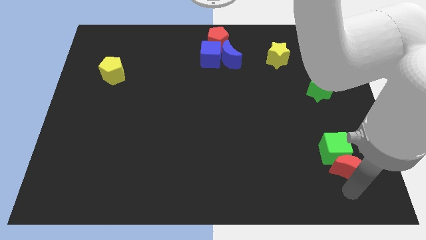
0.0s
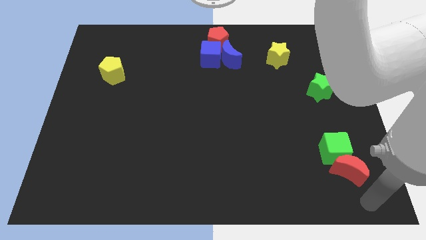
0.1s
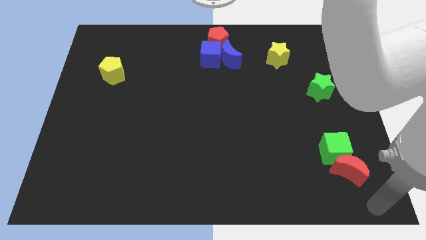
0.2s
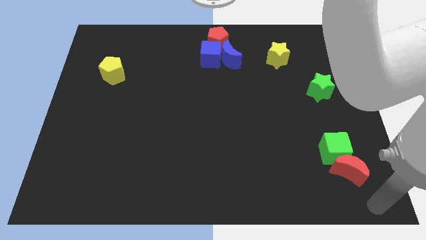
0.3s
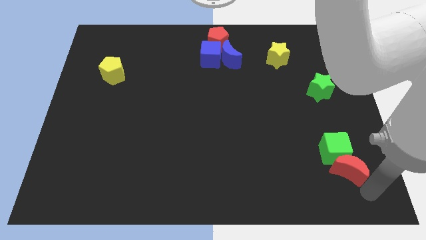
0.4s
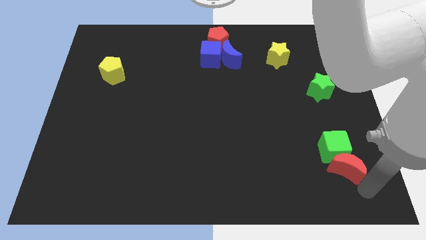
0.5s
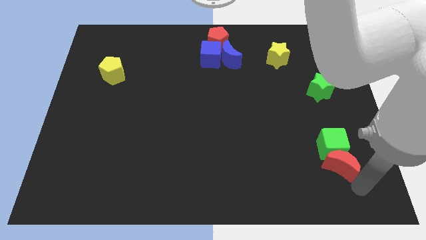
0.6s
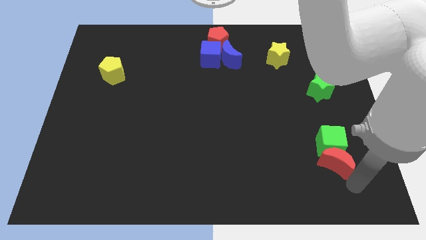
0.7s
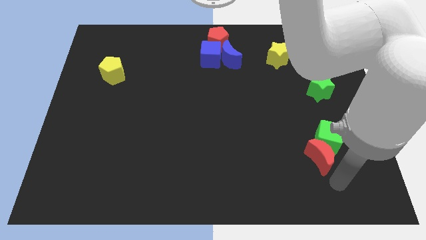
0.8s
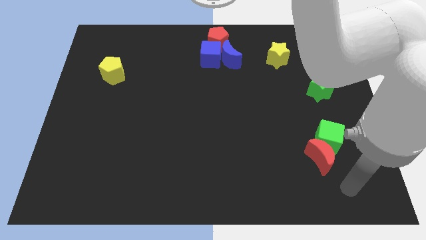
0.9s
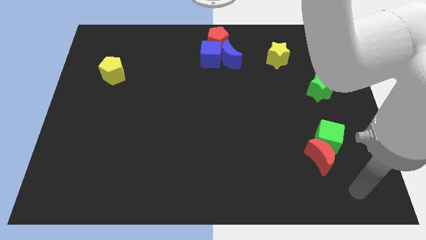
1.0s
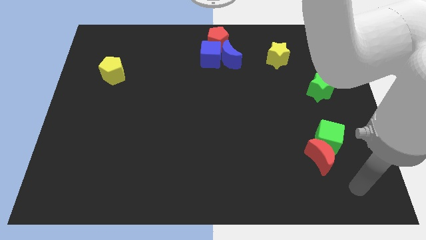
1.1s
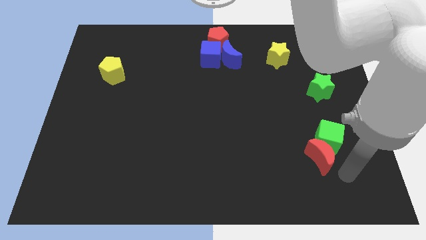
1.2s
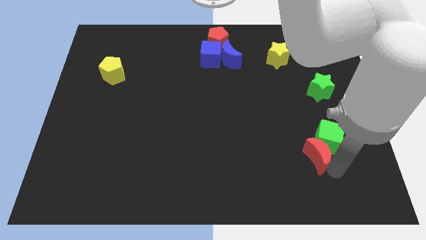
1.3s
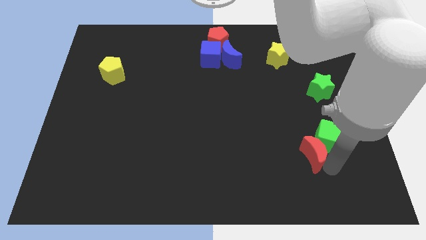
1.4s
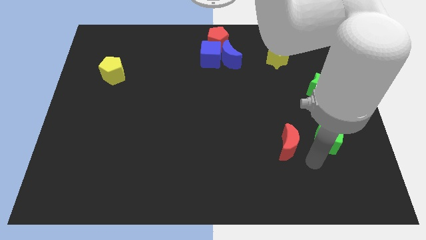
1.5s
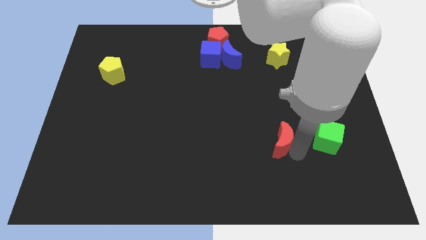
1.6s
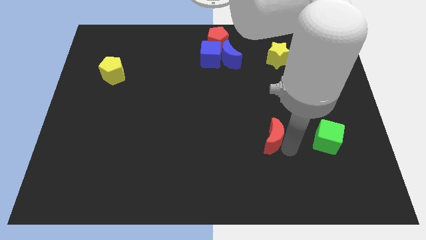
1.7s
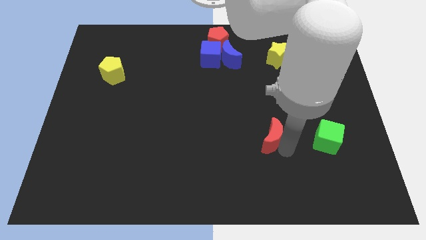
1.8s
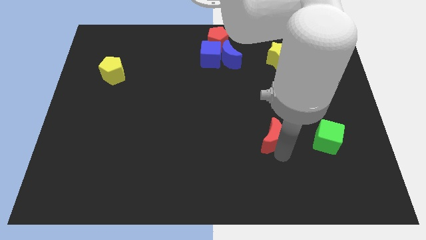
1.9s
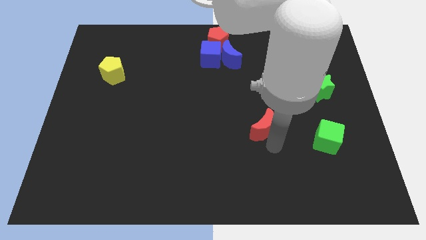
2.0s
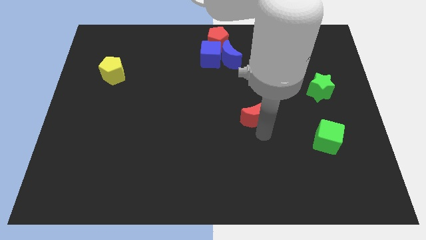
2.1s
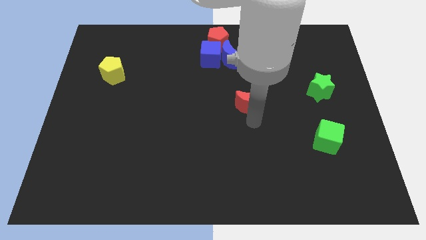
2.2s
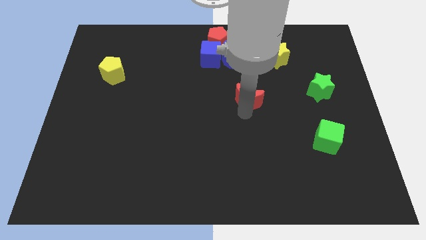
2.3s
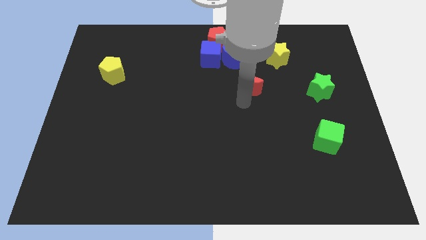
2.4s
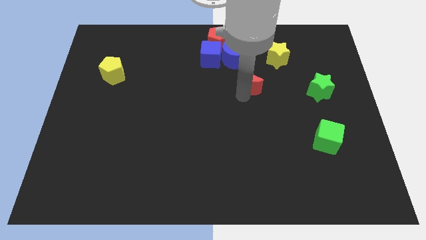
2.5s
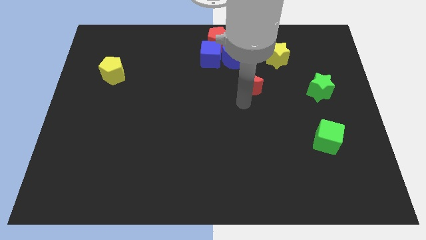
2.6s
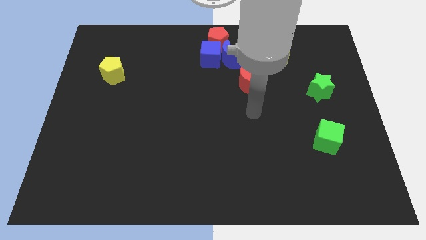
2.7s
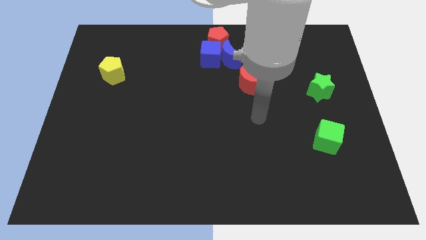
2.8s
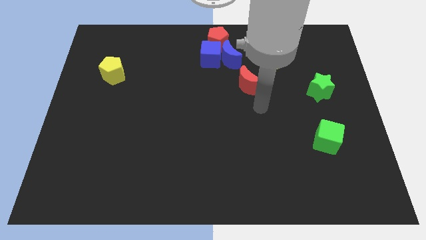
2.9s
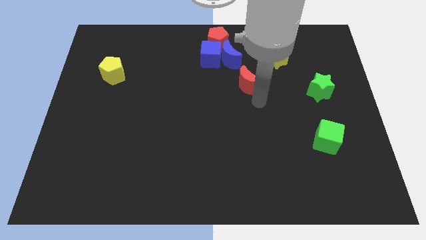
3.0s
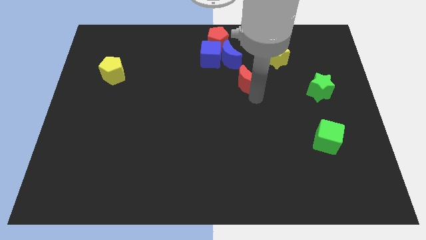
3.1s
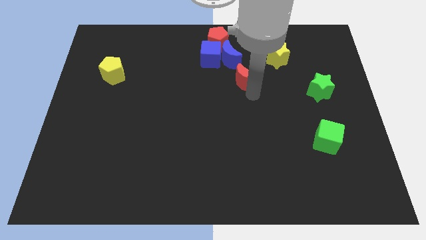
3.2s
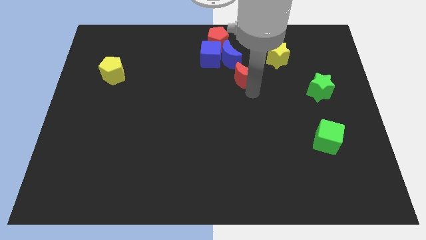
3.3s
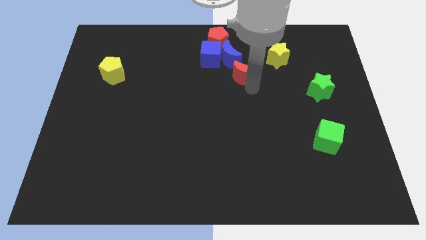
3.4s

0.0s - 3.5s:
move the red crescent below the blue crescent

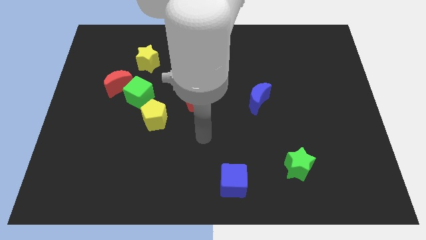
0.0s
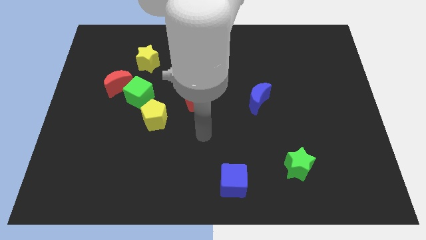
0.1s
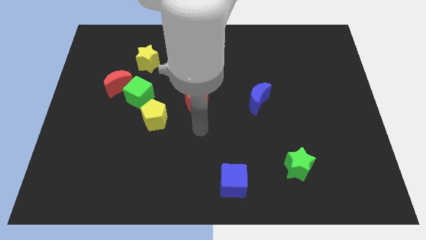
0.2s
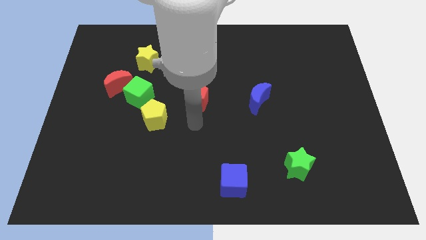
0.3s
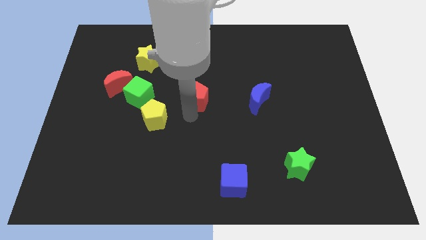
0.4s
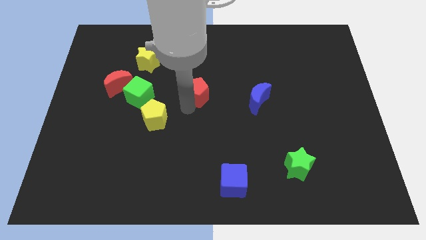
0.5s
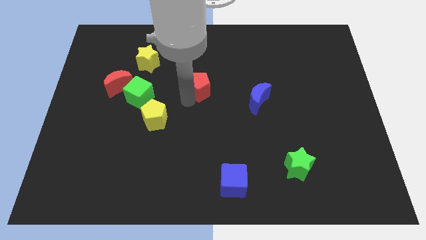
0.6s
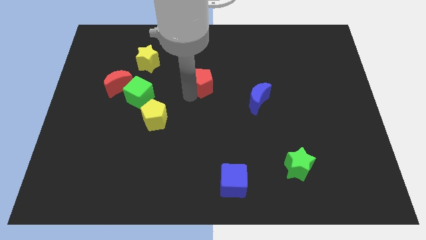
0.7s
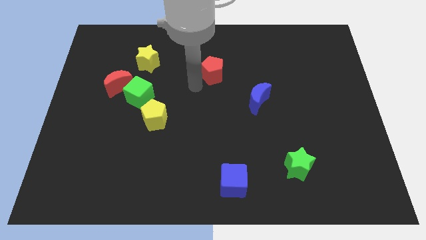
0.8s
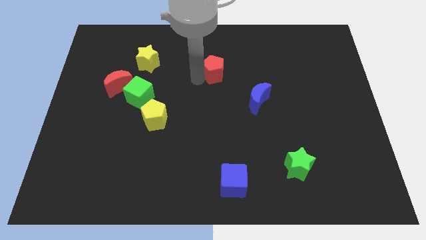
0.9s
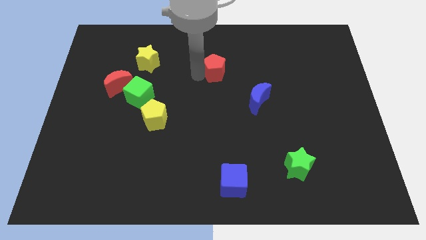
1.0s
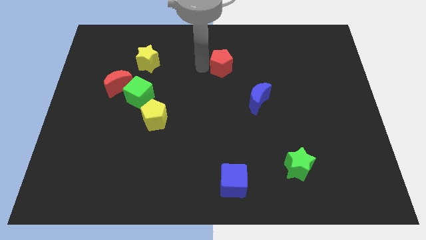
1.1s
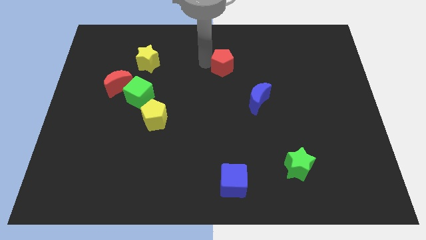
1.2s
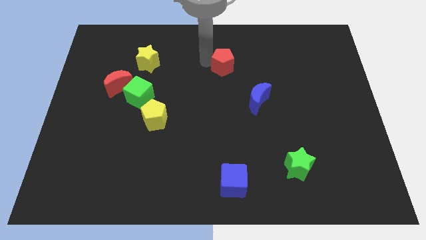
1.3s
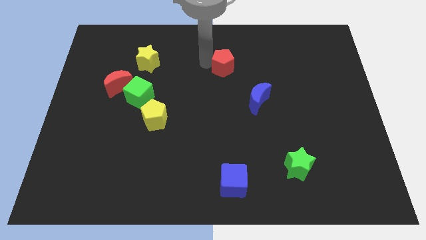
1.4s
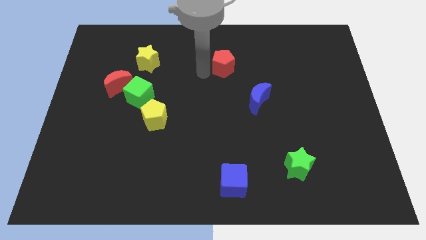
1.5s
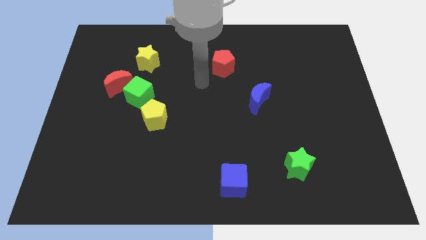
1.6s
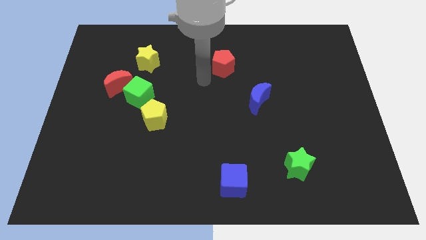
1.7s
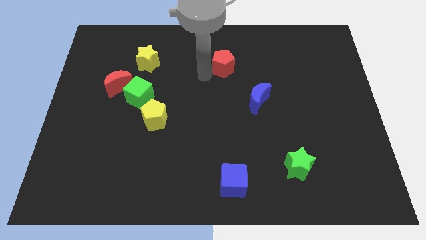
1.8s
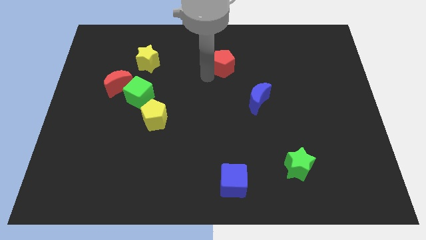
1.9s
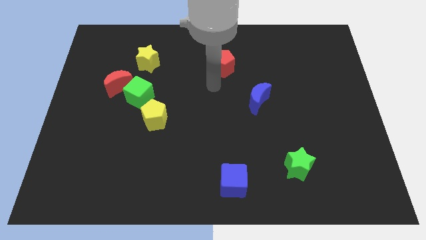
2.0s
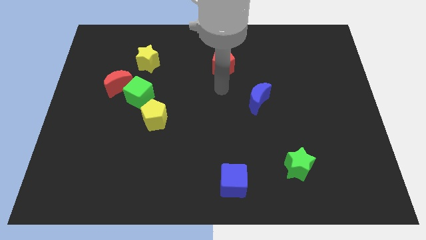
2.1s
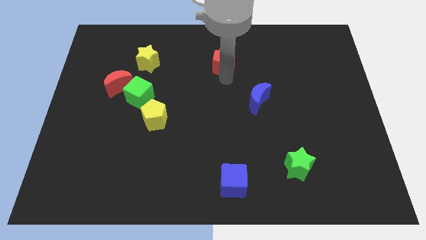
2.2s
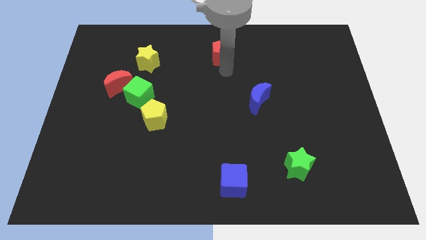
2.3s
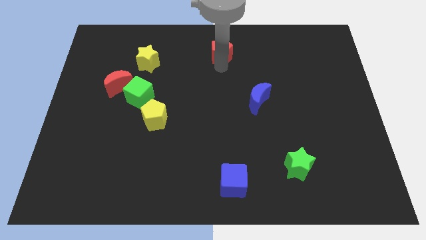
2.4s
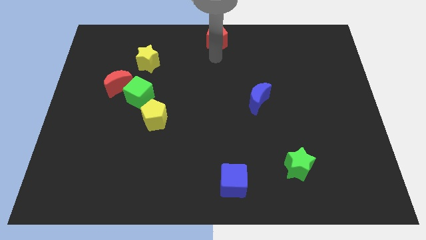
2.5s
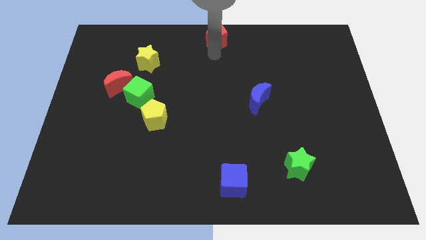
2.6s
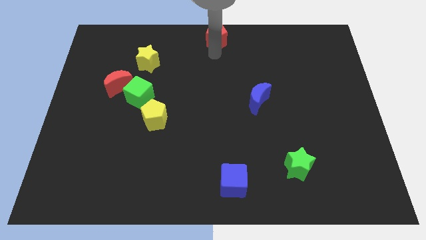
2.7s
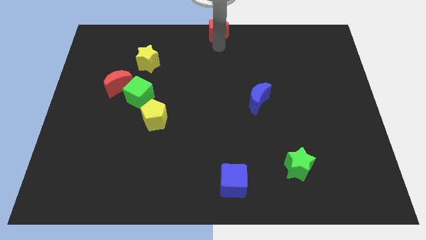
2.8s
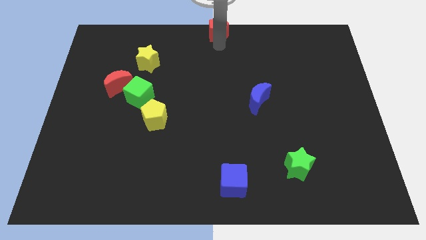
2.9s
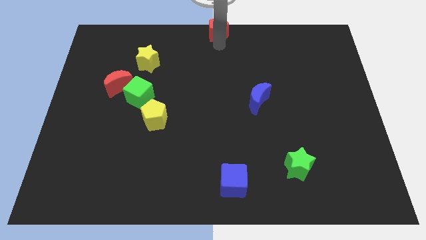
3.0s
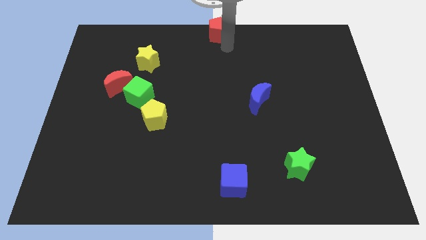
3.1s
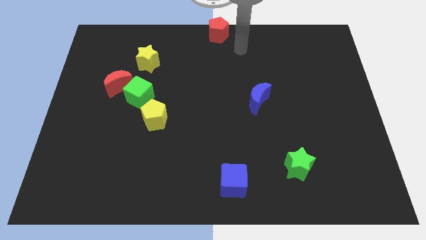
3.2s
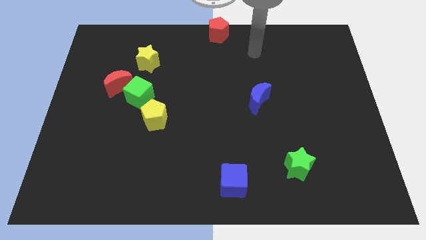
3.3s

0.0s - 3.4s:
place the red pentagon to the top center

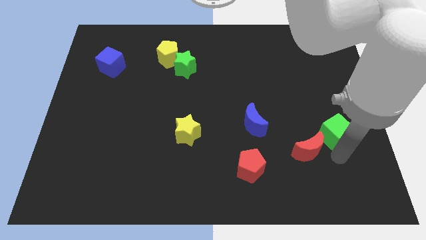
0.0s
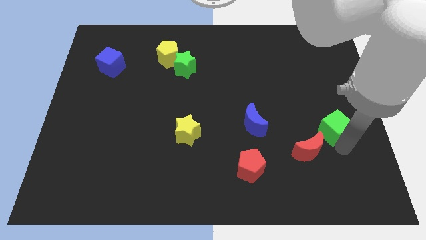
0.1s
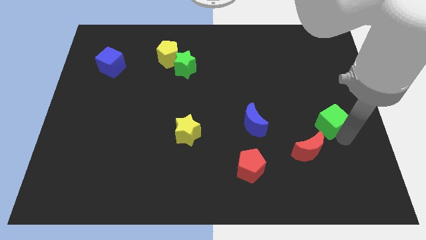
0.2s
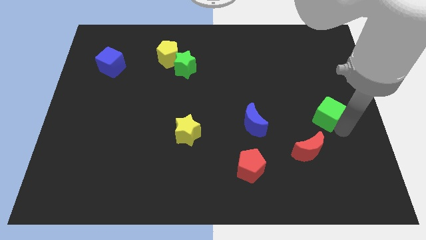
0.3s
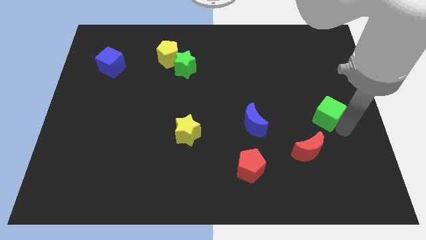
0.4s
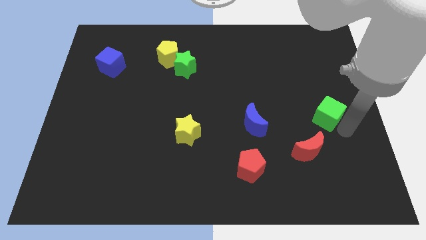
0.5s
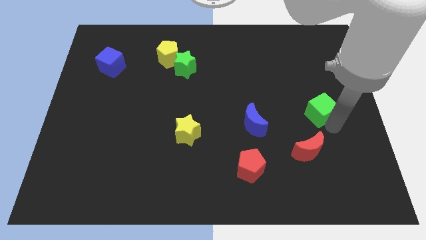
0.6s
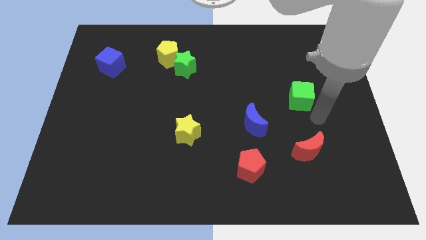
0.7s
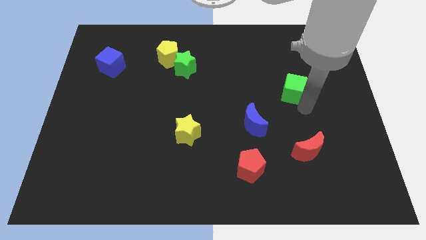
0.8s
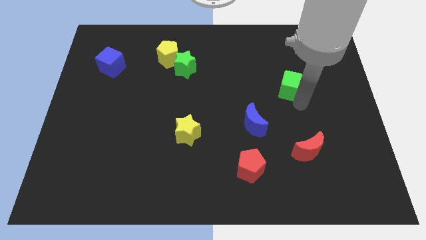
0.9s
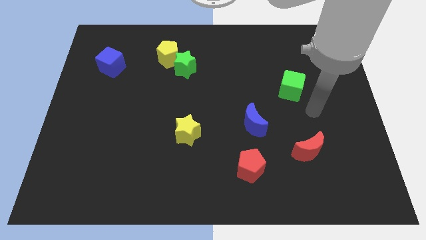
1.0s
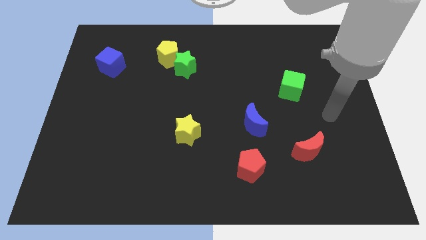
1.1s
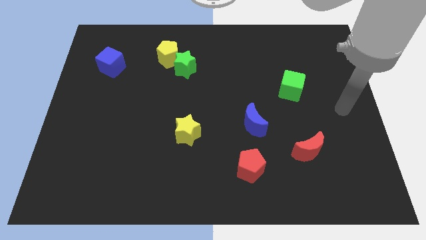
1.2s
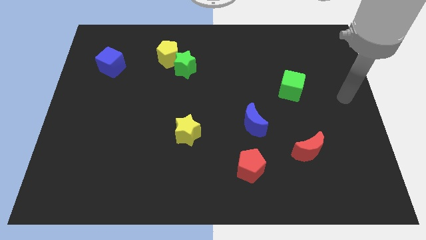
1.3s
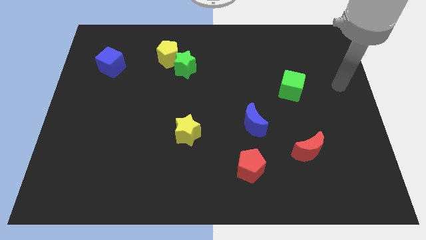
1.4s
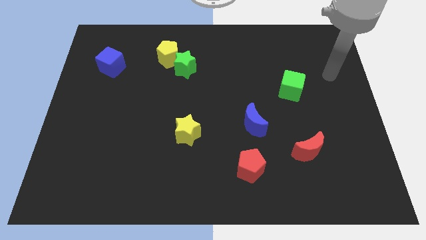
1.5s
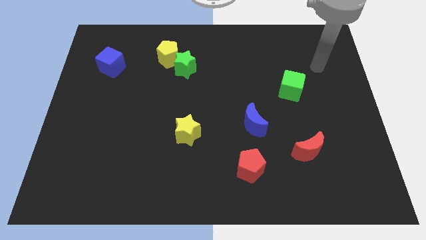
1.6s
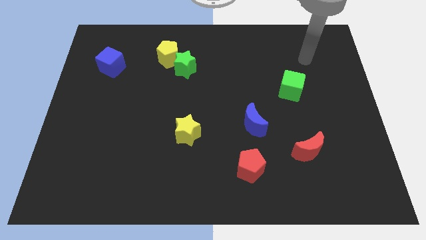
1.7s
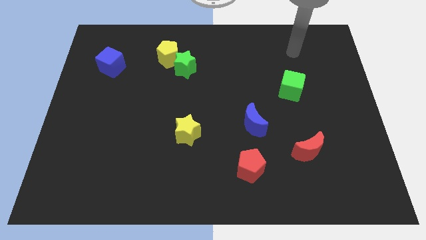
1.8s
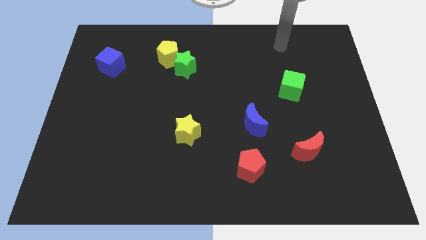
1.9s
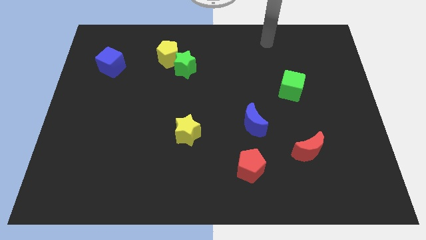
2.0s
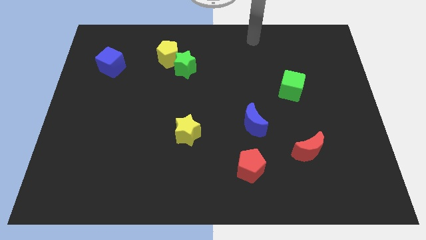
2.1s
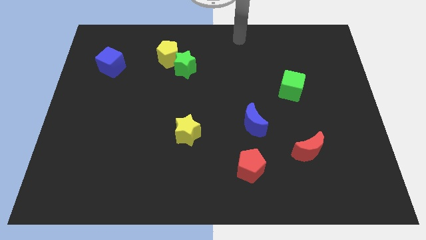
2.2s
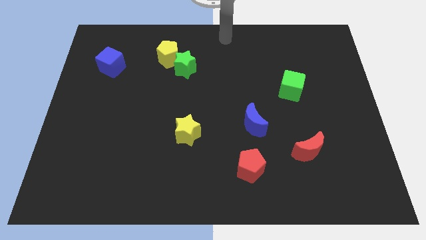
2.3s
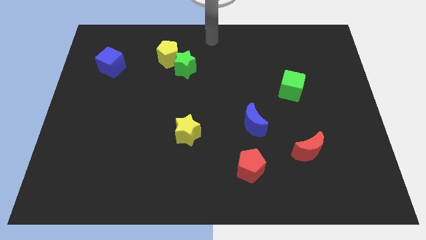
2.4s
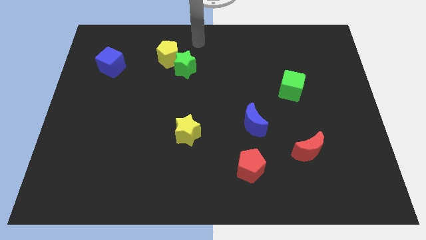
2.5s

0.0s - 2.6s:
move the green cube to the top of the board
